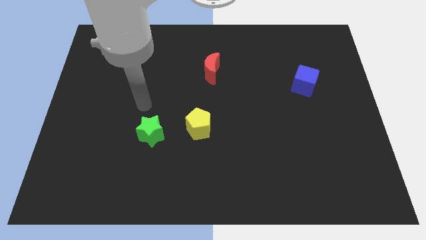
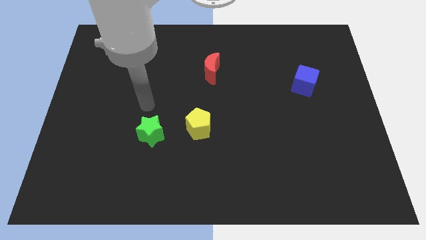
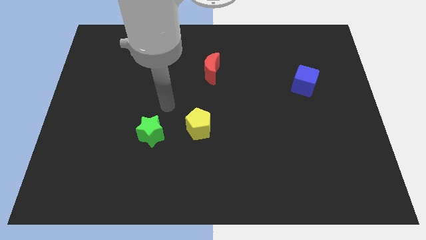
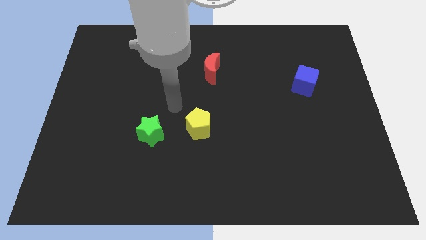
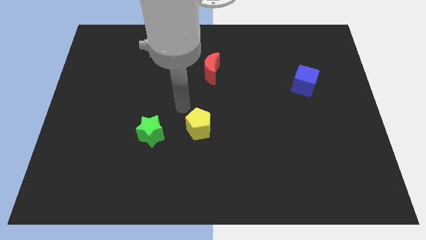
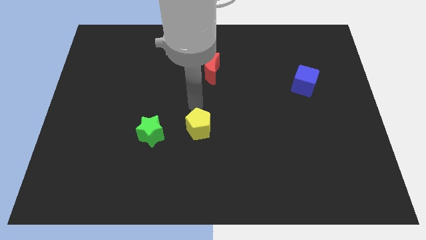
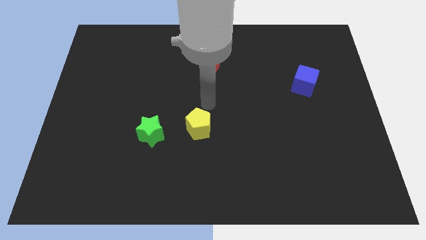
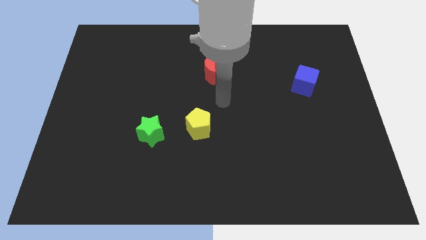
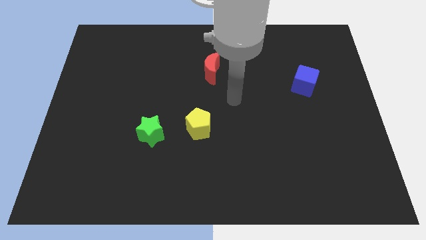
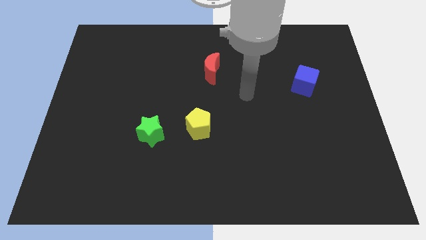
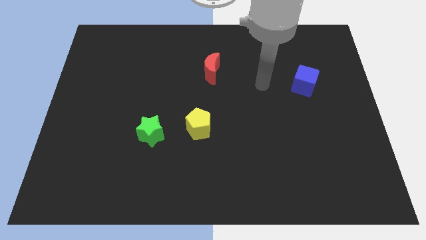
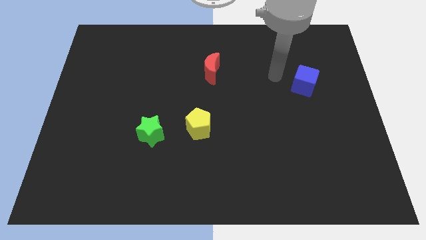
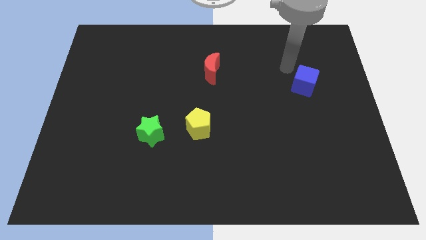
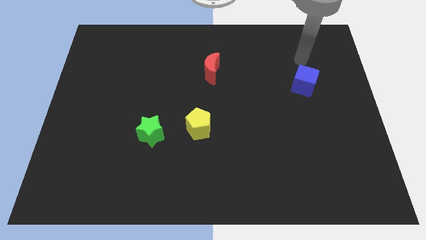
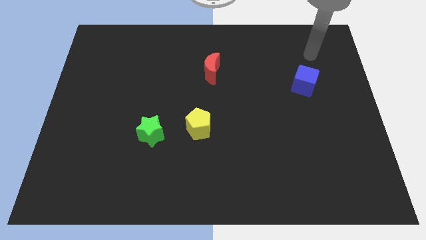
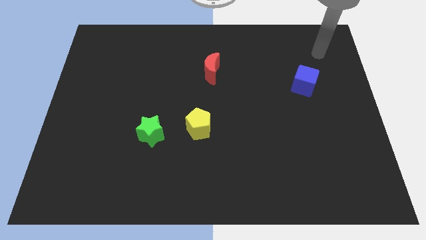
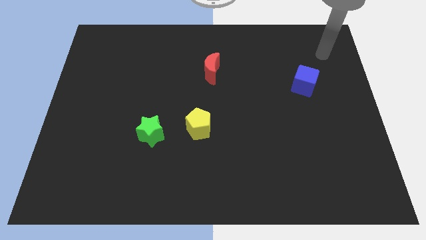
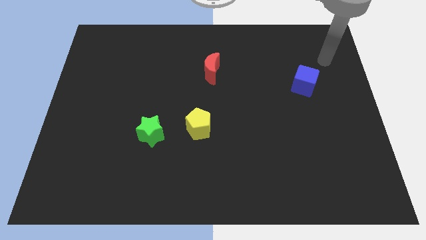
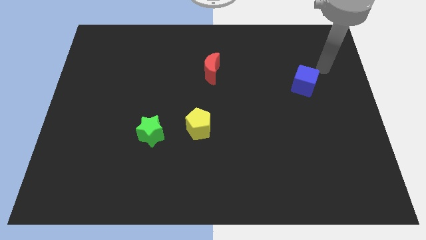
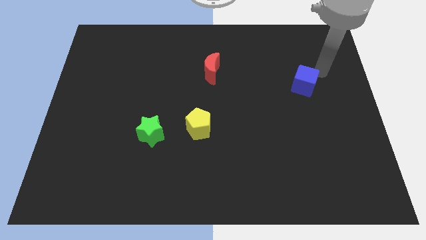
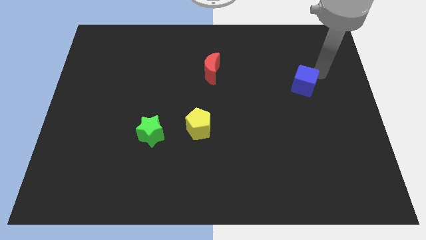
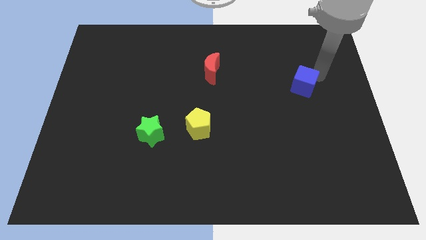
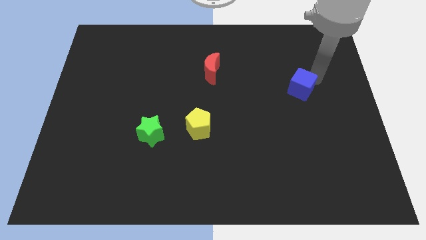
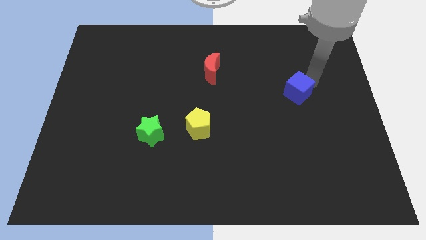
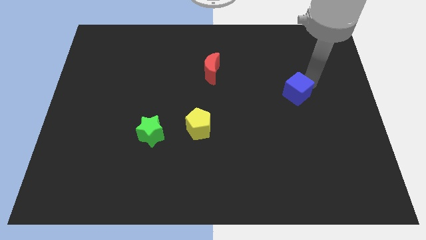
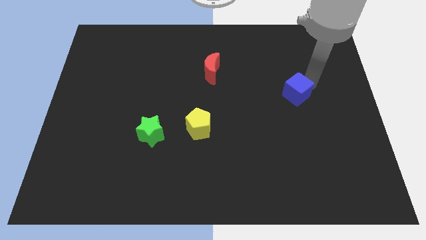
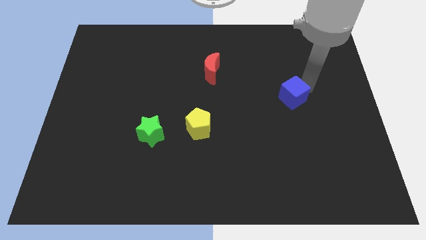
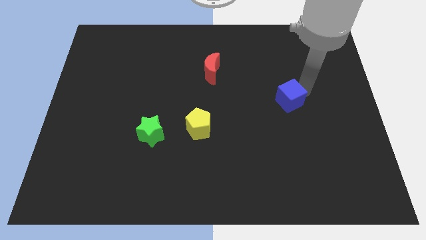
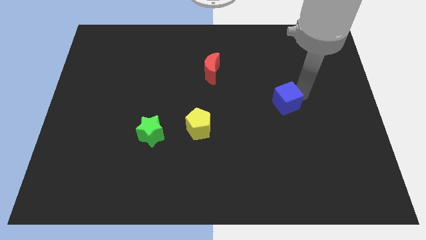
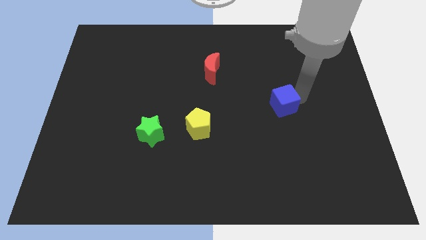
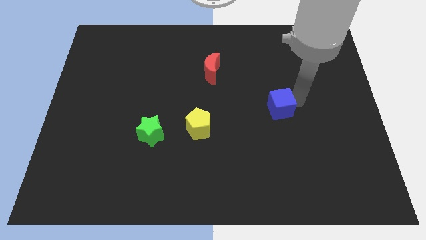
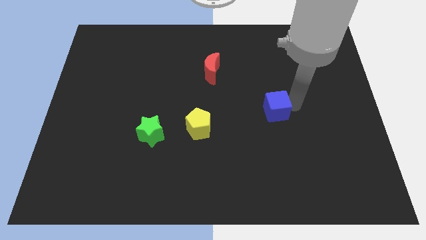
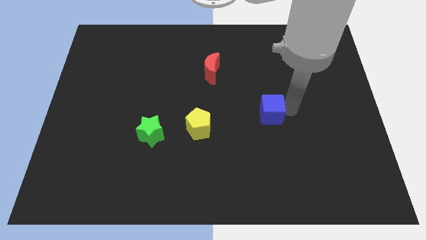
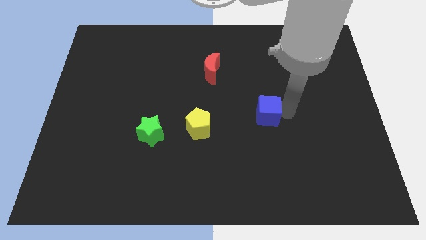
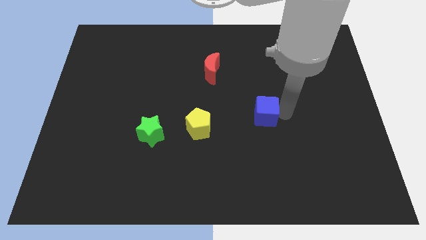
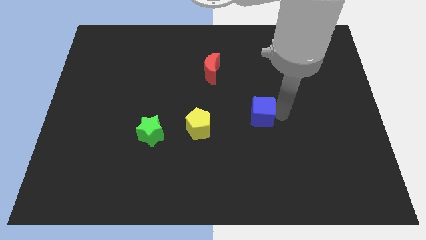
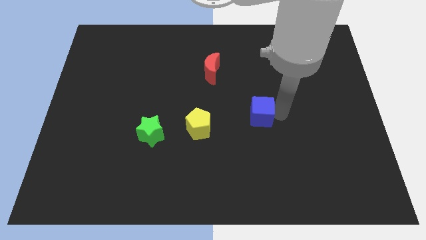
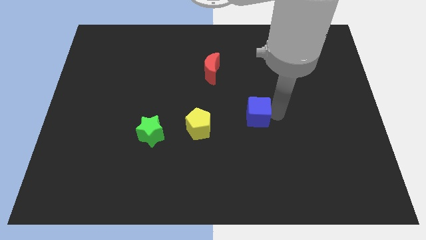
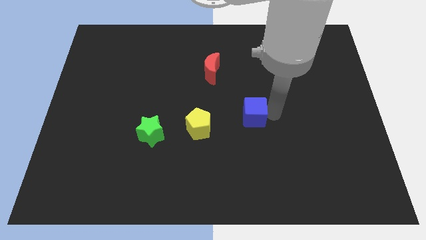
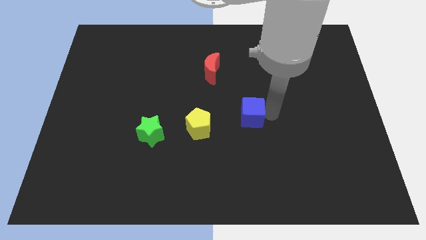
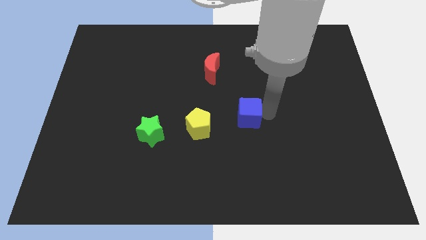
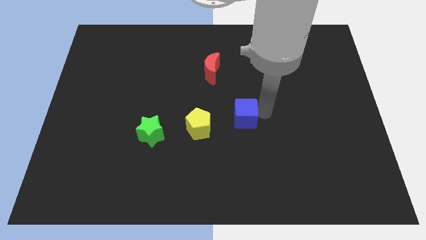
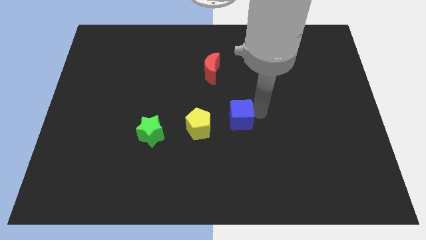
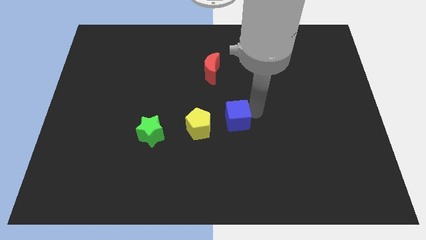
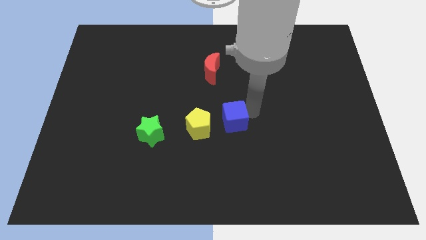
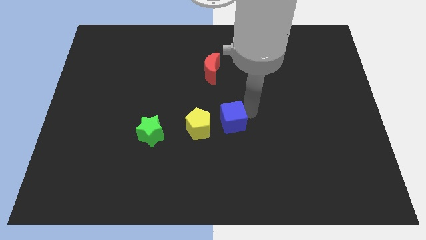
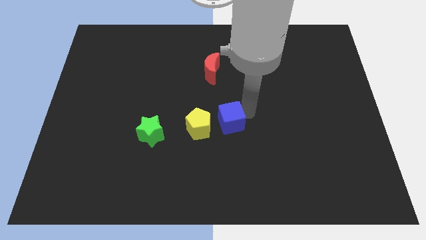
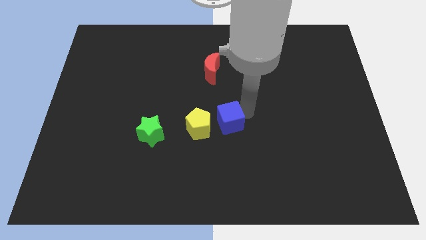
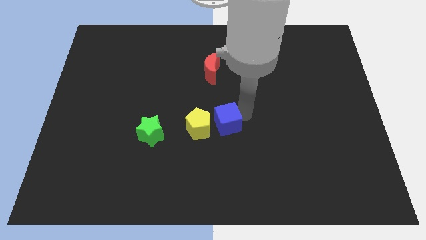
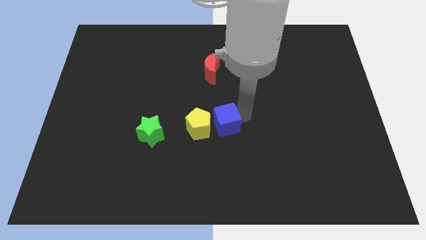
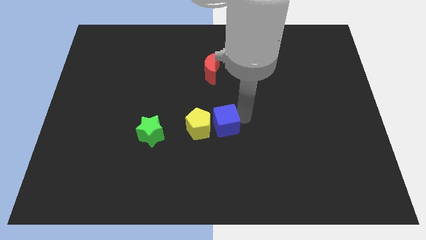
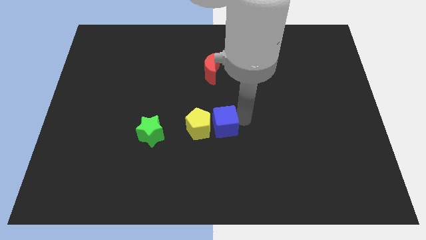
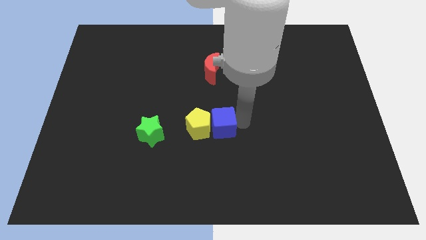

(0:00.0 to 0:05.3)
move the blue cube towards the pentagon

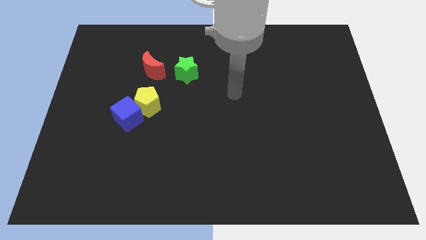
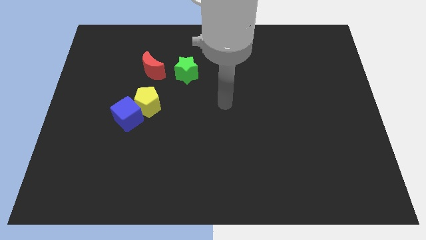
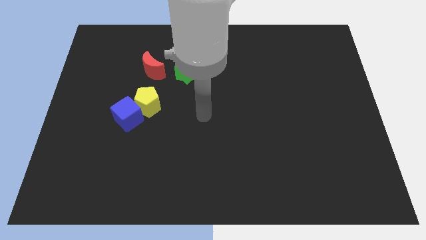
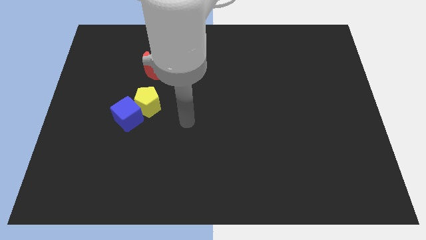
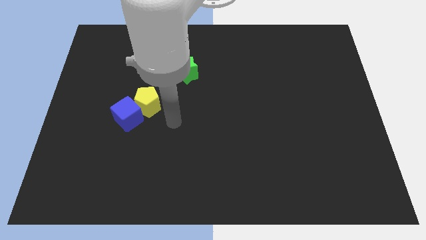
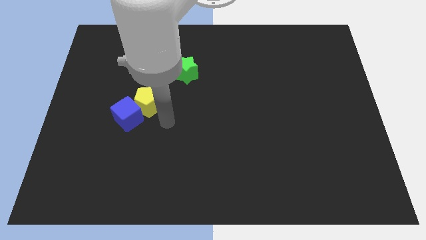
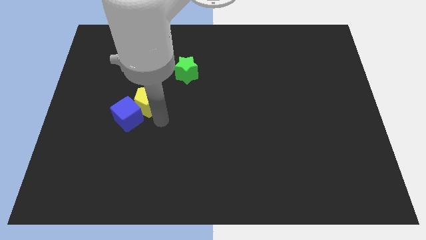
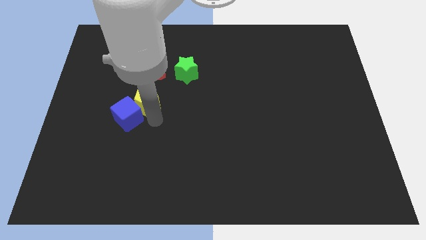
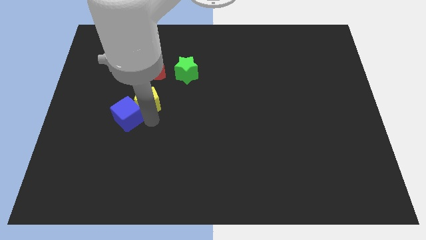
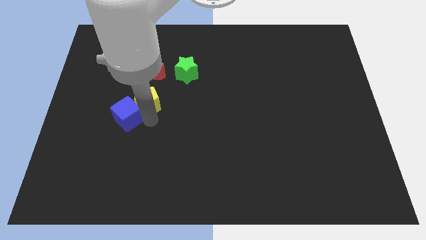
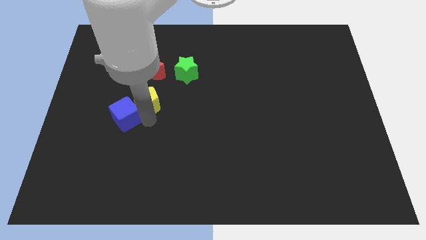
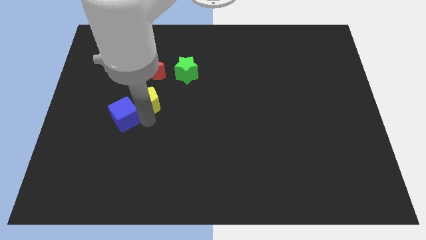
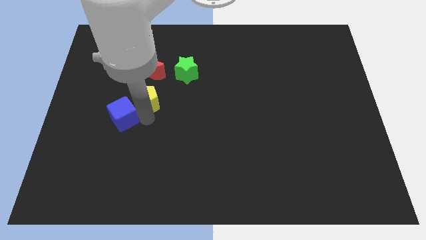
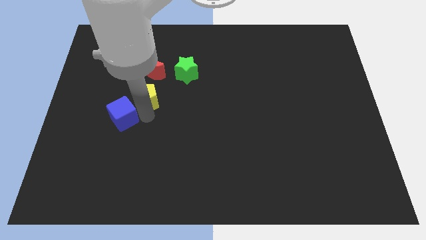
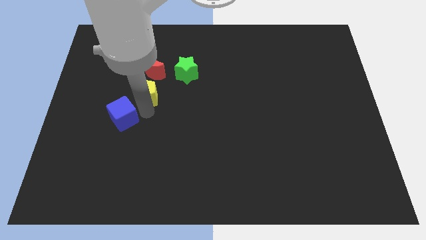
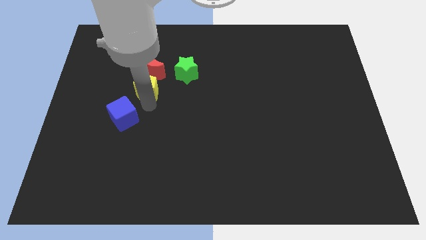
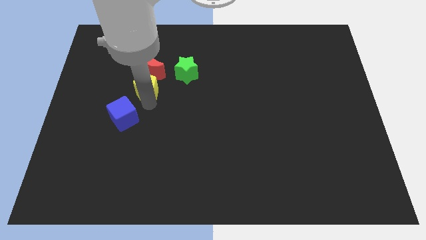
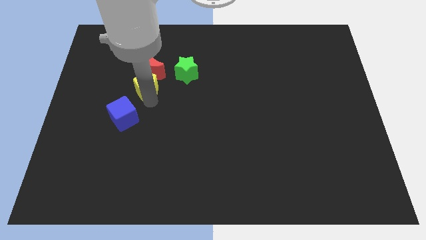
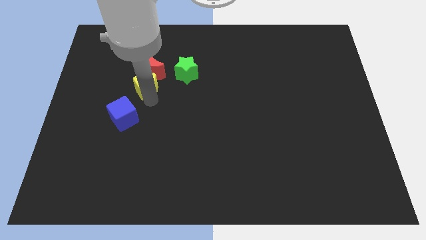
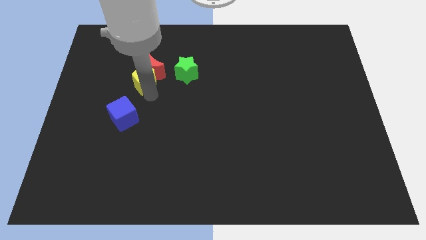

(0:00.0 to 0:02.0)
slide the yellow block towards the red moon

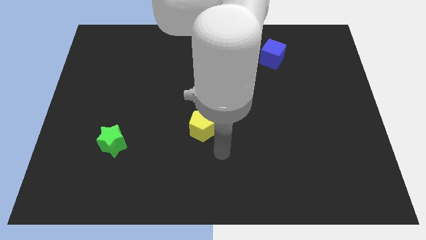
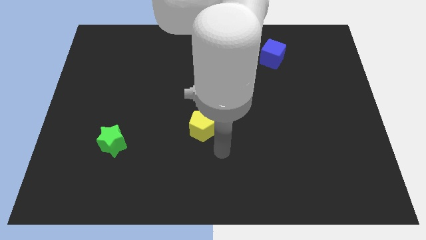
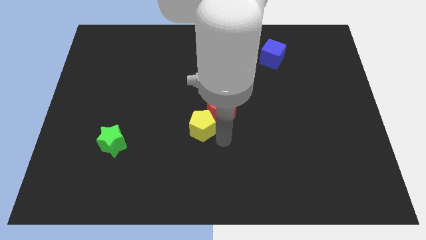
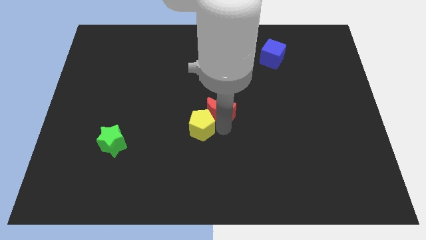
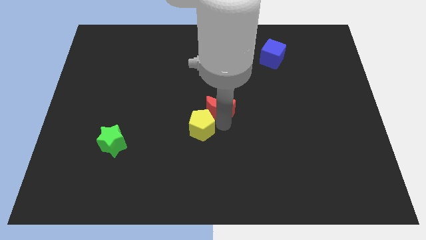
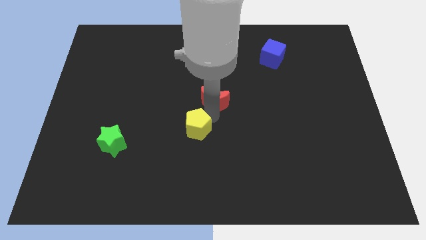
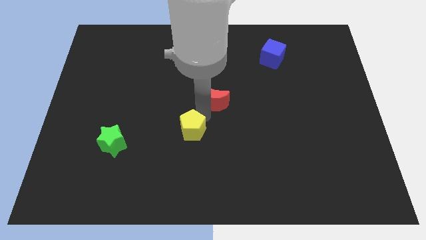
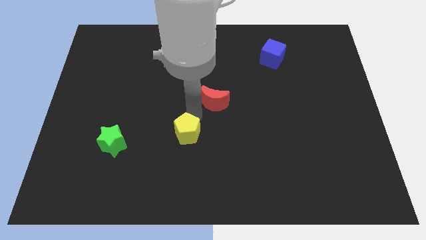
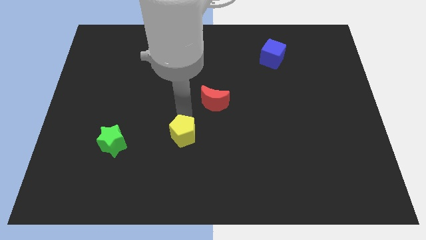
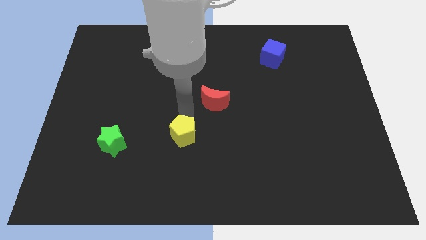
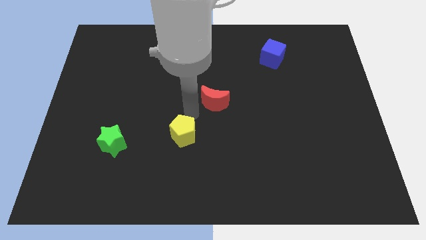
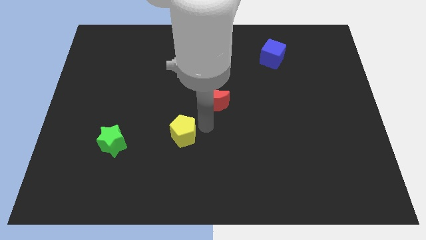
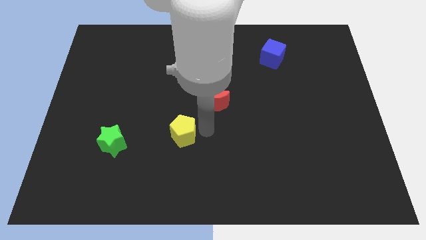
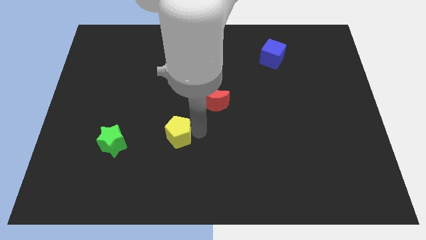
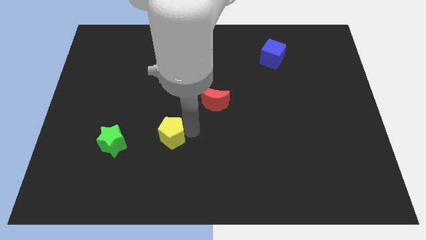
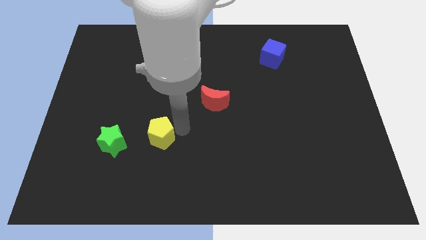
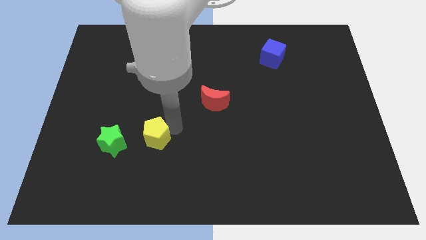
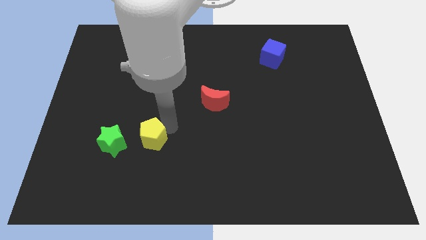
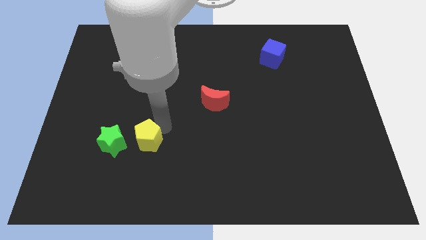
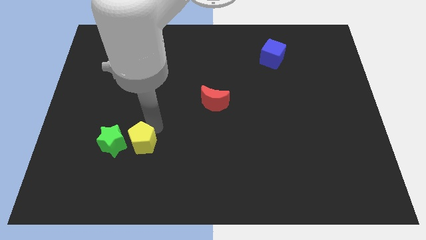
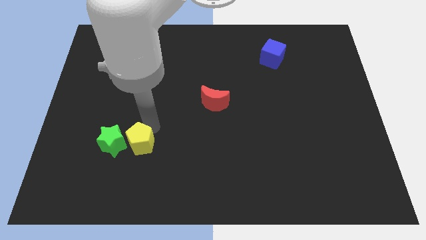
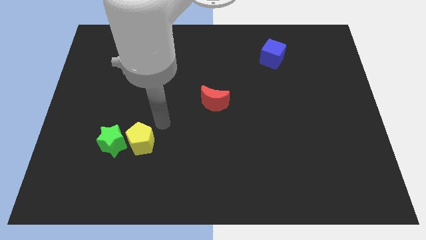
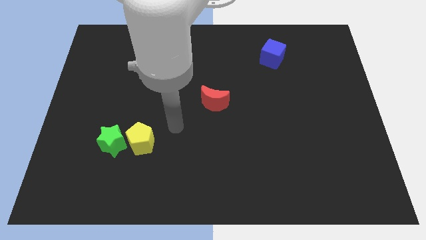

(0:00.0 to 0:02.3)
move the yellow block close to the green block
